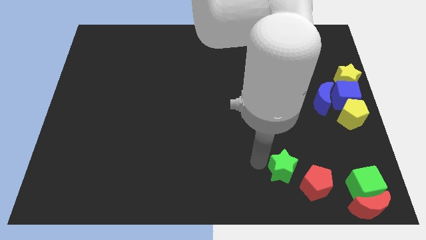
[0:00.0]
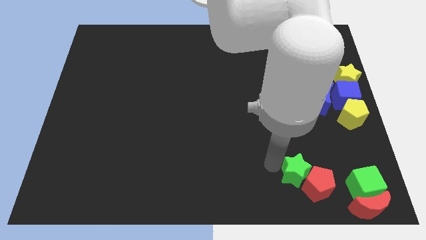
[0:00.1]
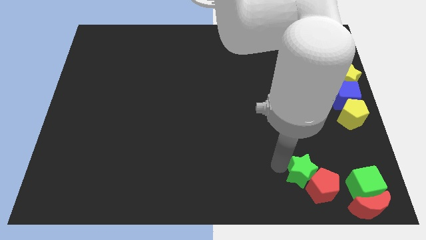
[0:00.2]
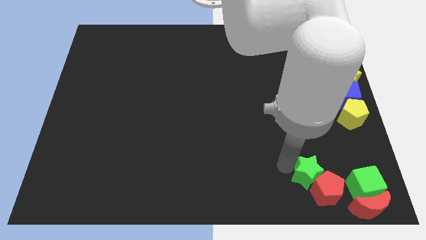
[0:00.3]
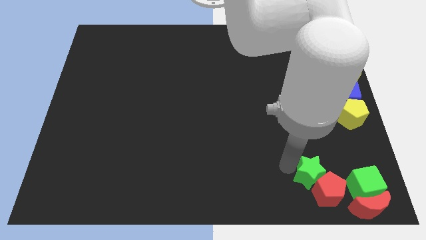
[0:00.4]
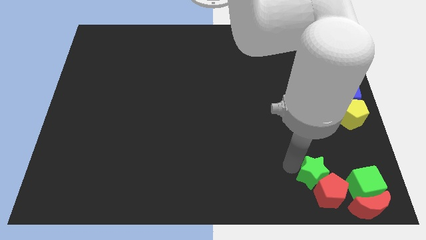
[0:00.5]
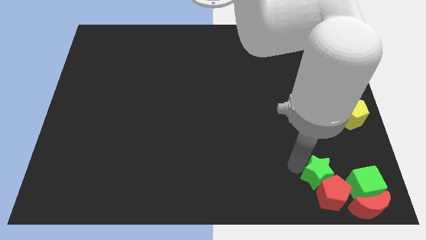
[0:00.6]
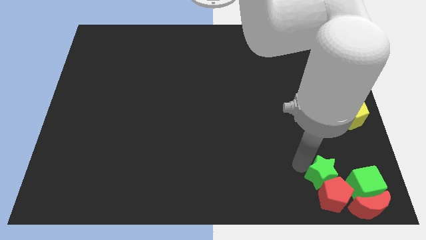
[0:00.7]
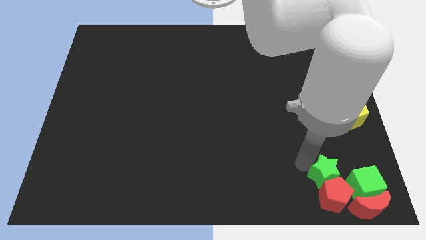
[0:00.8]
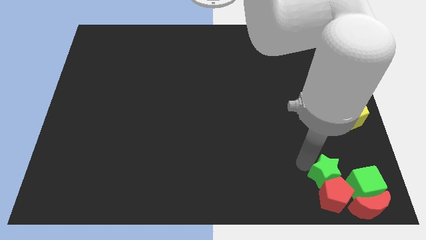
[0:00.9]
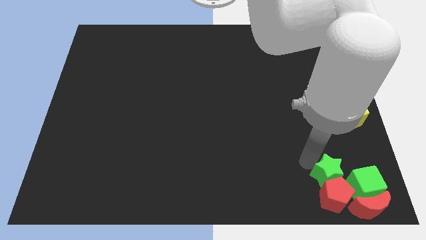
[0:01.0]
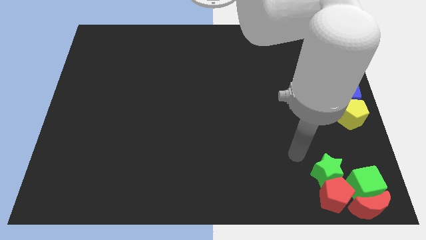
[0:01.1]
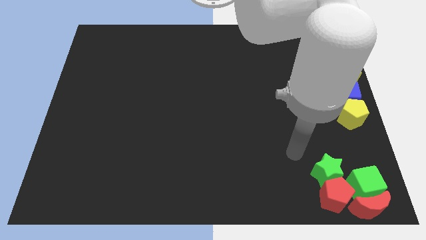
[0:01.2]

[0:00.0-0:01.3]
push the green star into the red pentagon

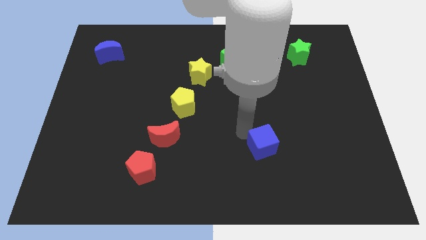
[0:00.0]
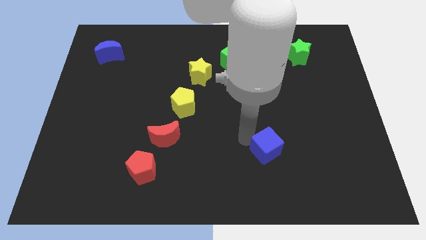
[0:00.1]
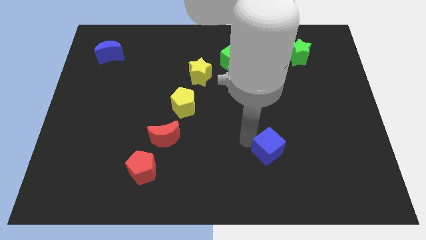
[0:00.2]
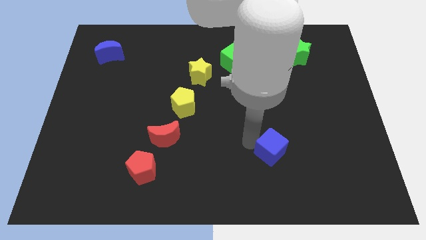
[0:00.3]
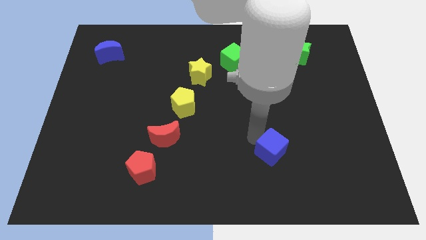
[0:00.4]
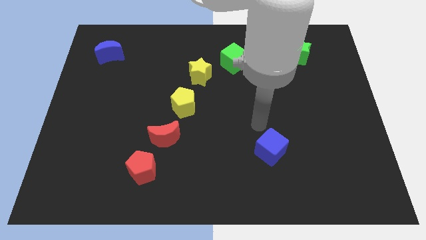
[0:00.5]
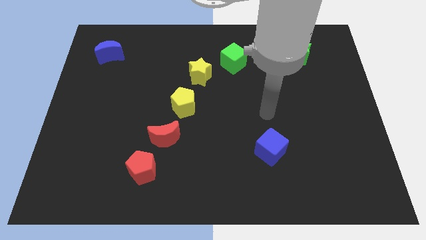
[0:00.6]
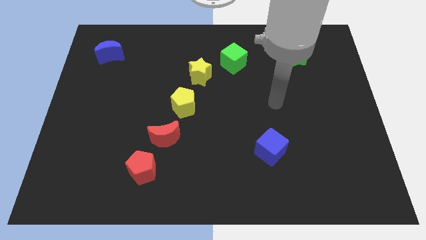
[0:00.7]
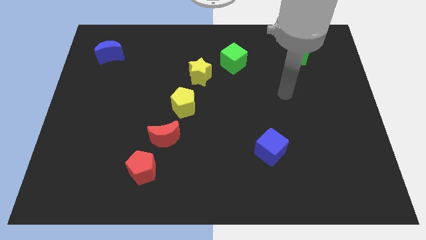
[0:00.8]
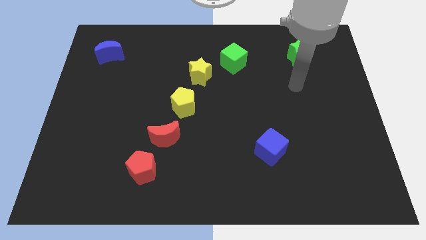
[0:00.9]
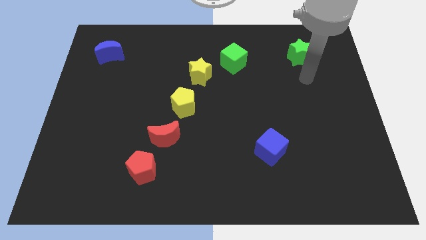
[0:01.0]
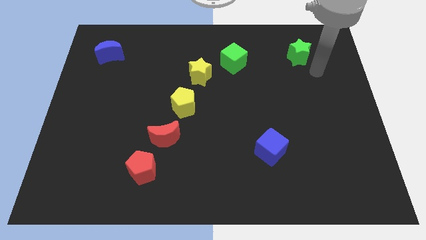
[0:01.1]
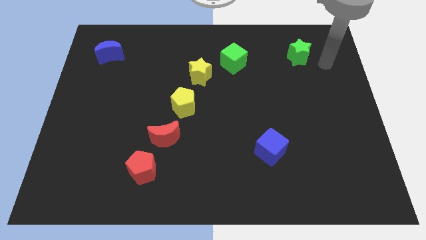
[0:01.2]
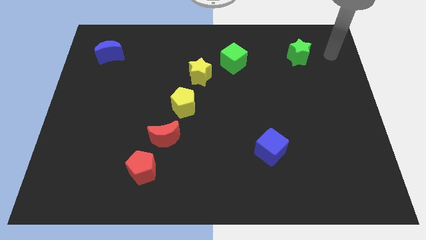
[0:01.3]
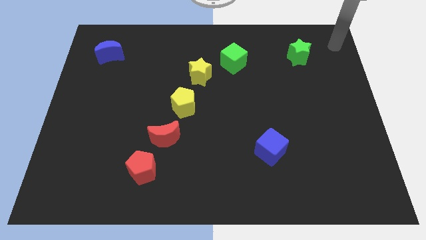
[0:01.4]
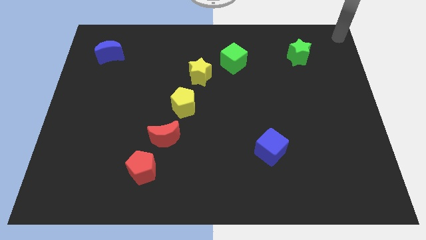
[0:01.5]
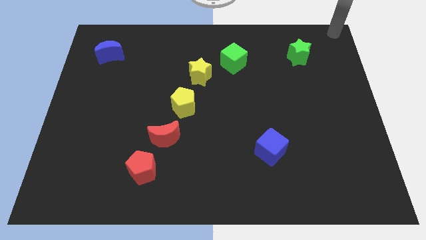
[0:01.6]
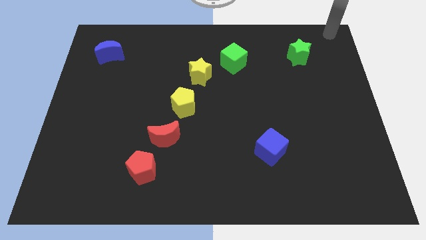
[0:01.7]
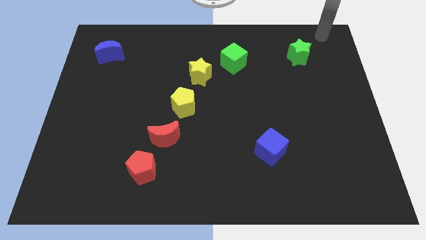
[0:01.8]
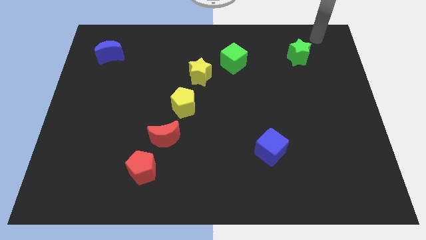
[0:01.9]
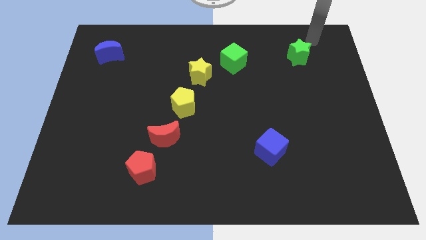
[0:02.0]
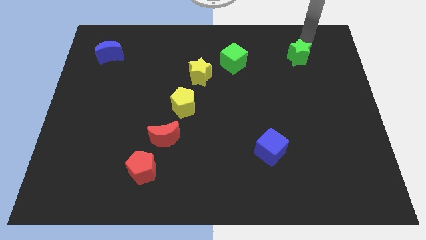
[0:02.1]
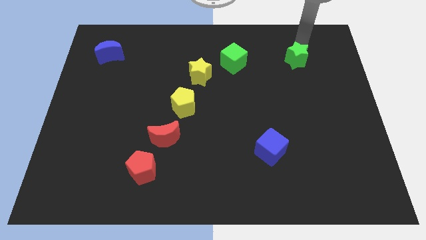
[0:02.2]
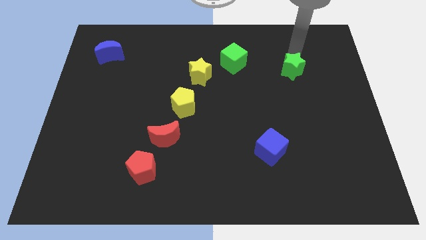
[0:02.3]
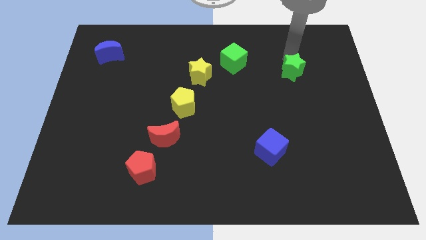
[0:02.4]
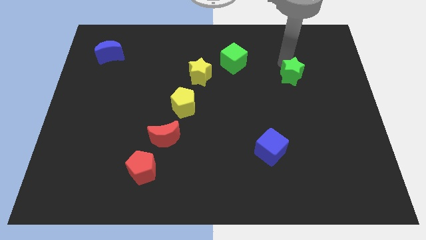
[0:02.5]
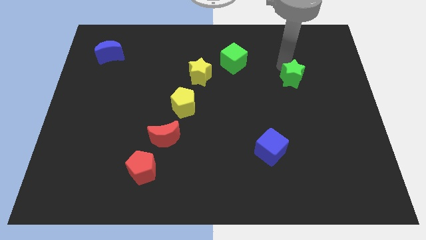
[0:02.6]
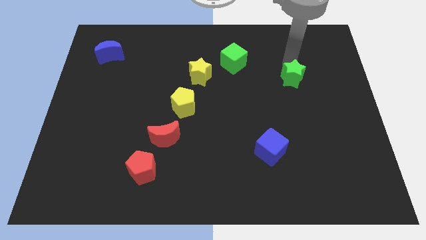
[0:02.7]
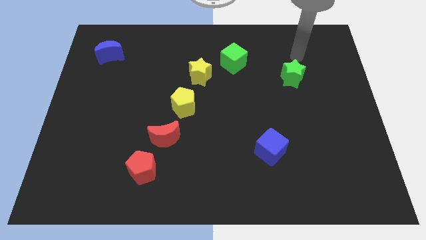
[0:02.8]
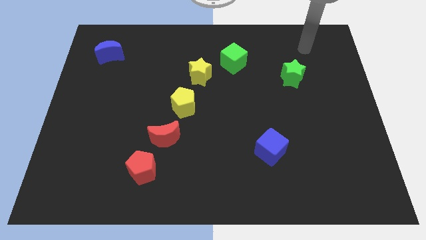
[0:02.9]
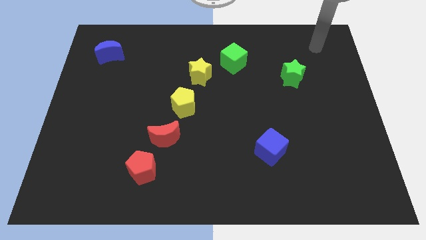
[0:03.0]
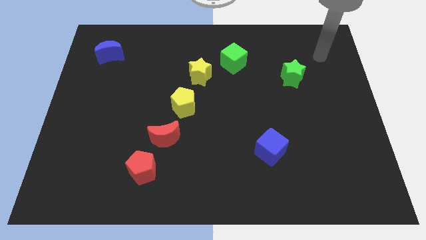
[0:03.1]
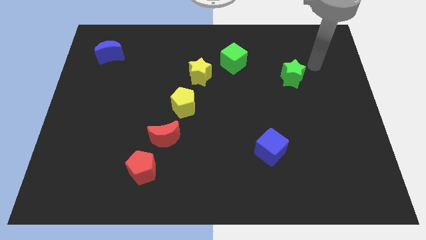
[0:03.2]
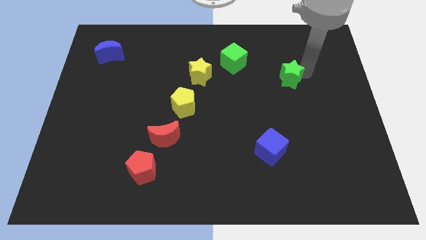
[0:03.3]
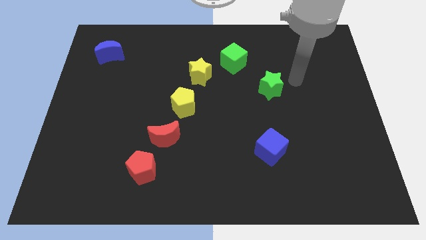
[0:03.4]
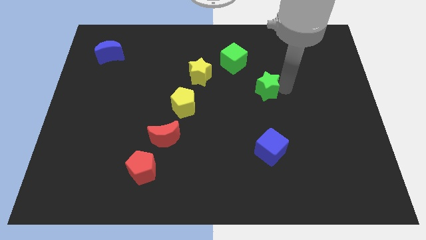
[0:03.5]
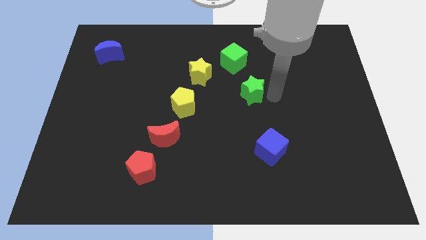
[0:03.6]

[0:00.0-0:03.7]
move the green star vertical to the blue cube

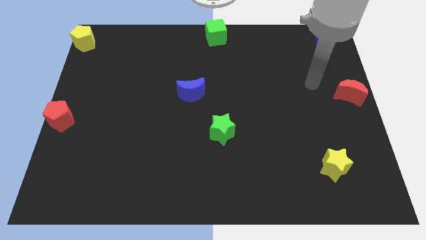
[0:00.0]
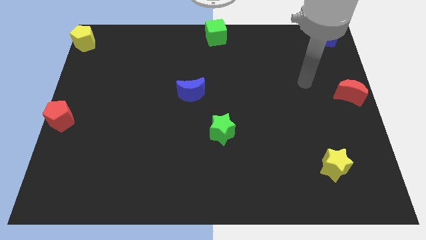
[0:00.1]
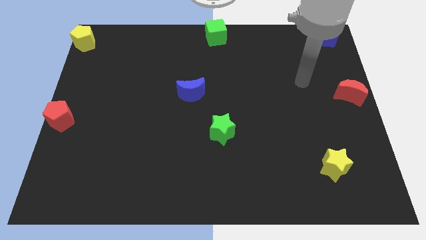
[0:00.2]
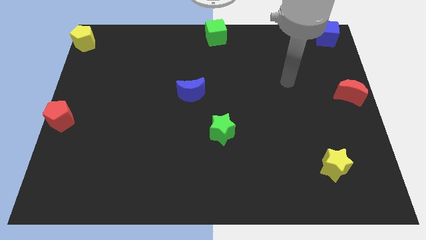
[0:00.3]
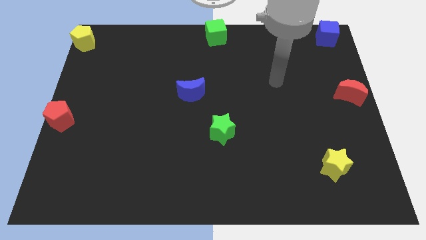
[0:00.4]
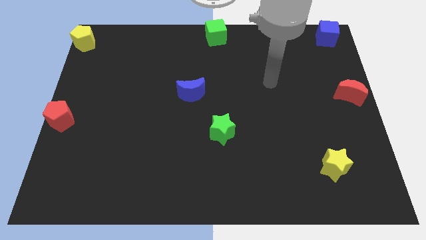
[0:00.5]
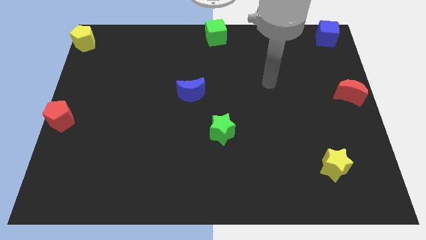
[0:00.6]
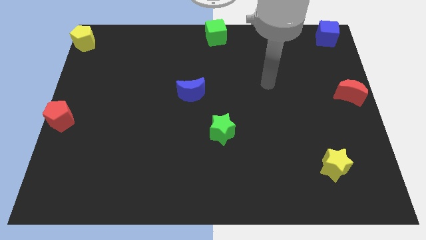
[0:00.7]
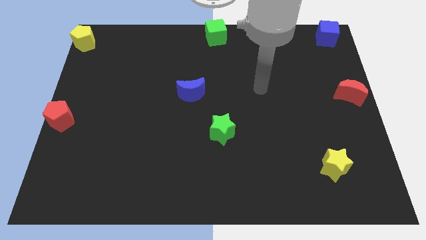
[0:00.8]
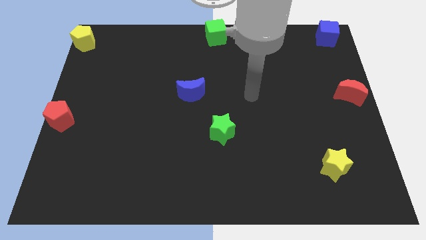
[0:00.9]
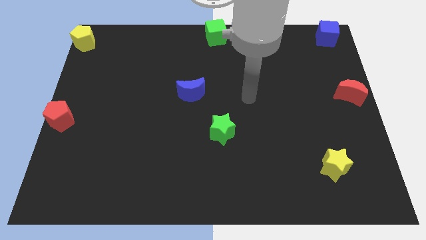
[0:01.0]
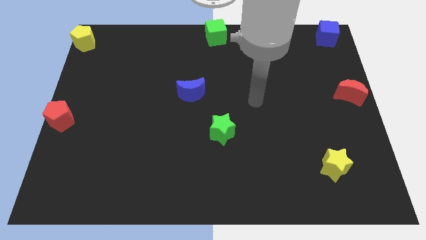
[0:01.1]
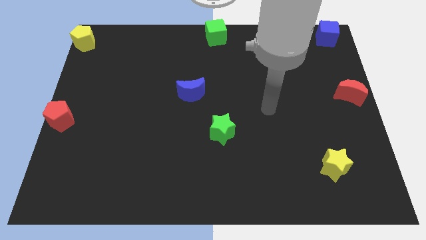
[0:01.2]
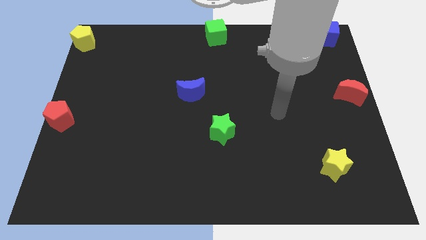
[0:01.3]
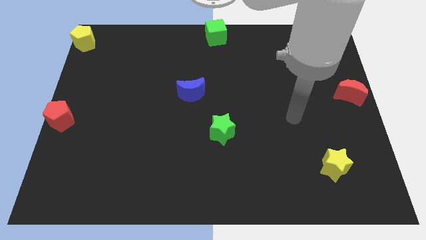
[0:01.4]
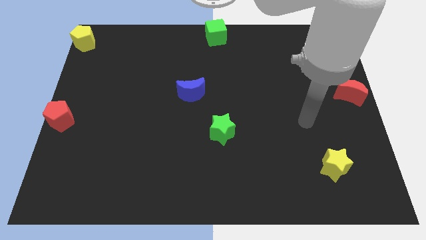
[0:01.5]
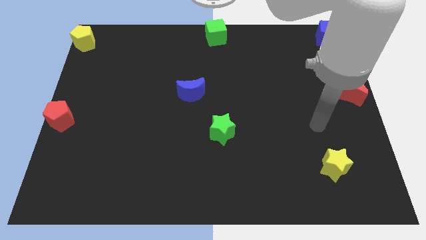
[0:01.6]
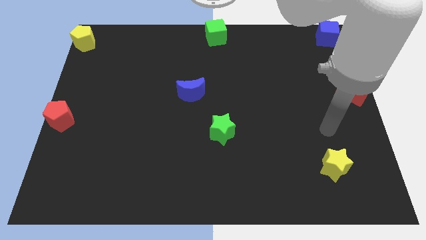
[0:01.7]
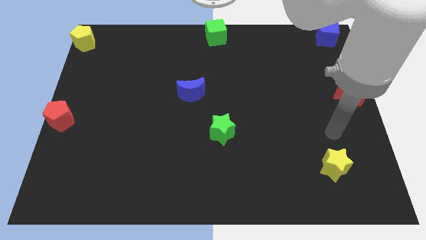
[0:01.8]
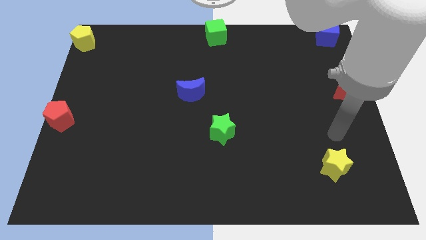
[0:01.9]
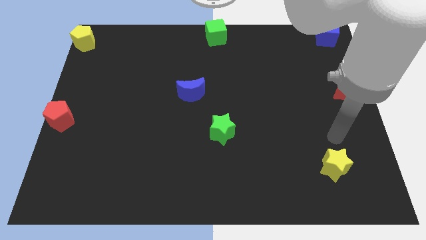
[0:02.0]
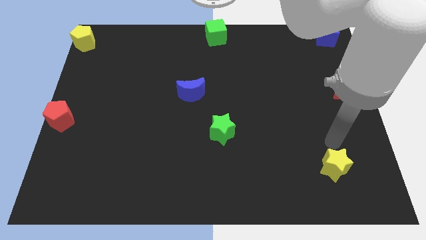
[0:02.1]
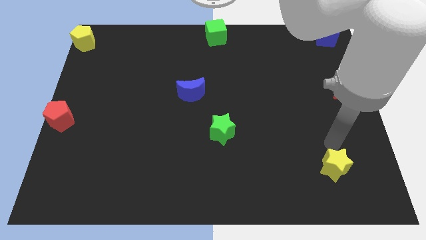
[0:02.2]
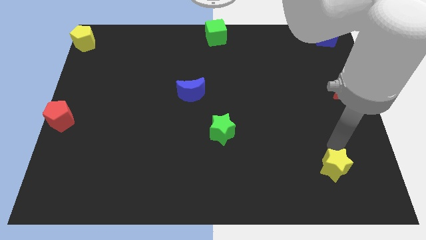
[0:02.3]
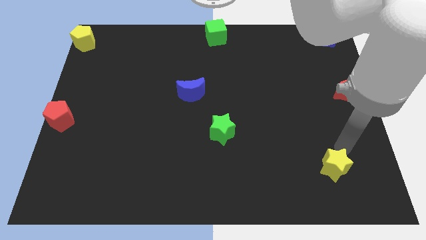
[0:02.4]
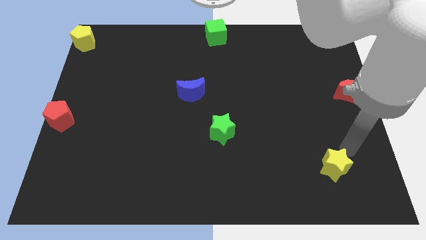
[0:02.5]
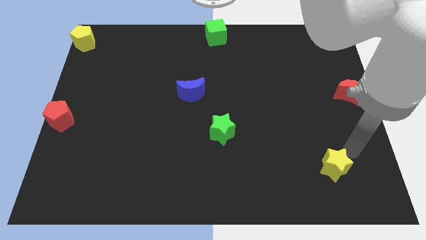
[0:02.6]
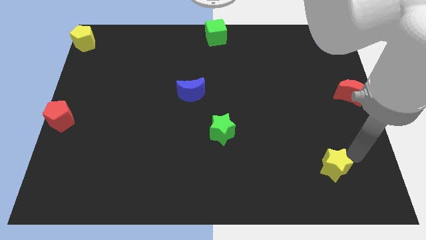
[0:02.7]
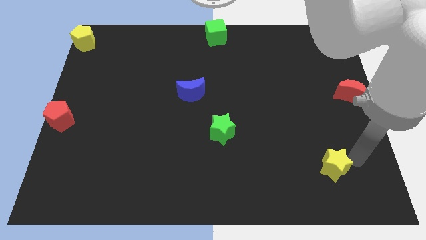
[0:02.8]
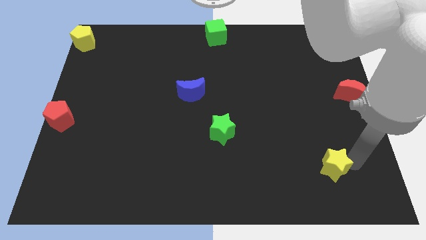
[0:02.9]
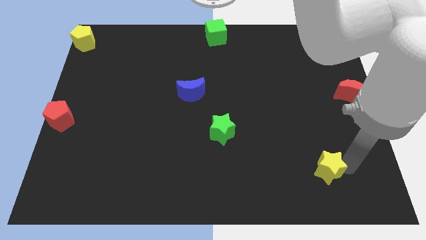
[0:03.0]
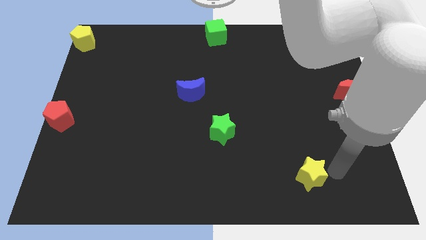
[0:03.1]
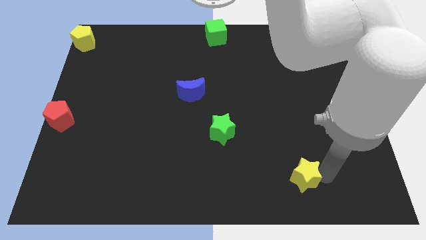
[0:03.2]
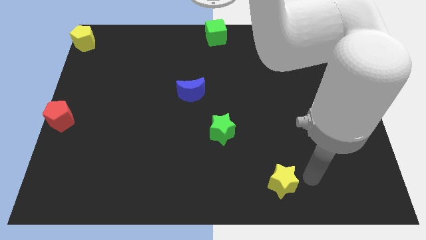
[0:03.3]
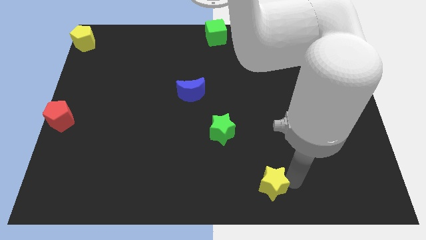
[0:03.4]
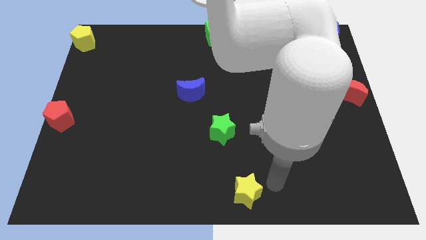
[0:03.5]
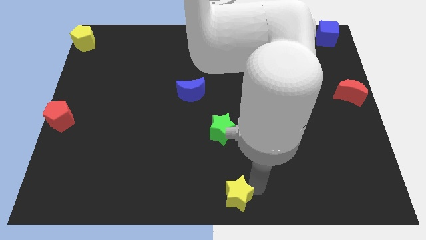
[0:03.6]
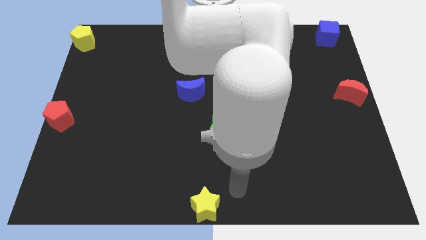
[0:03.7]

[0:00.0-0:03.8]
push the yellow star to the bottom center of the board

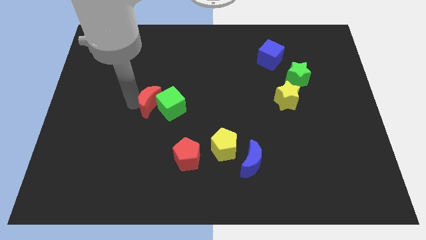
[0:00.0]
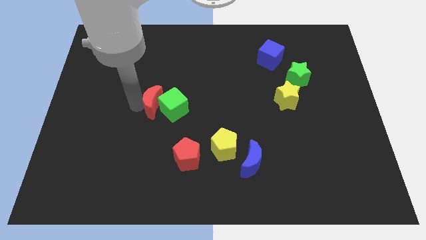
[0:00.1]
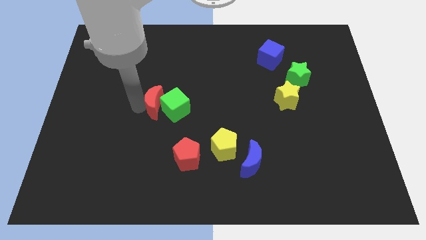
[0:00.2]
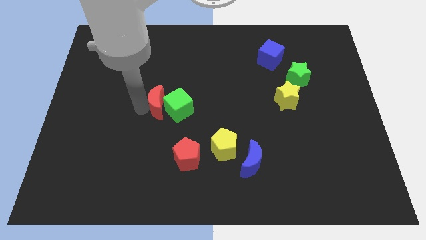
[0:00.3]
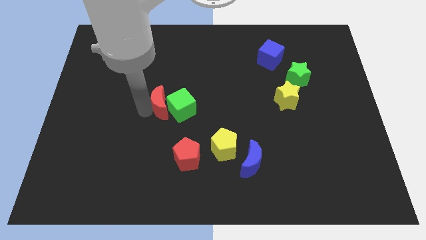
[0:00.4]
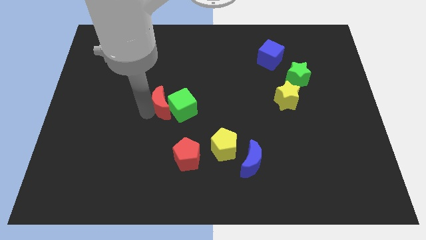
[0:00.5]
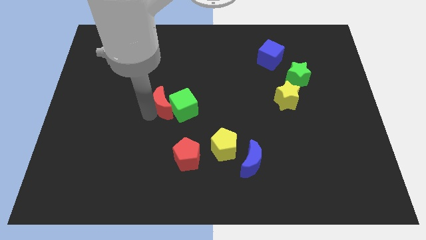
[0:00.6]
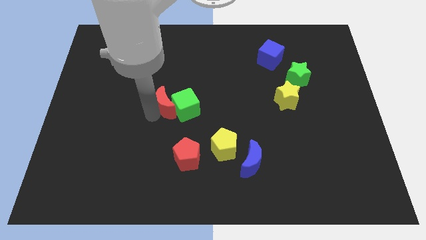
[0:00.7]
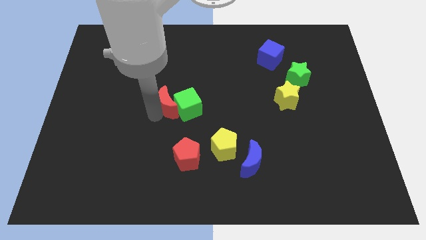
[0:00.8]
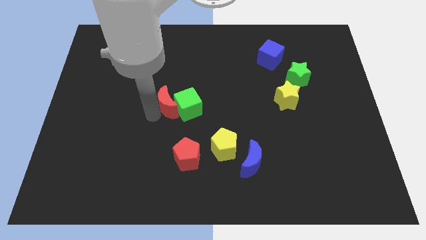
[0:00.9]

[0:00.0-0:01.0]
move the red moon slightly right
